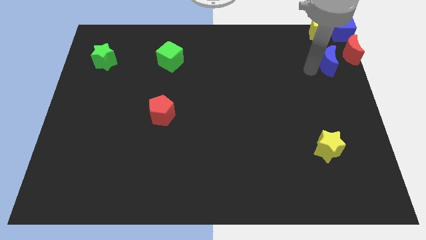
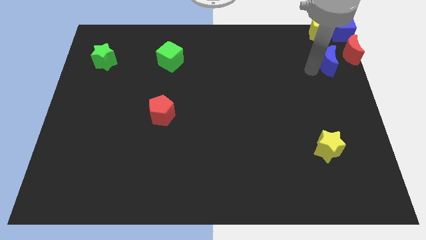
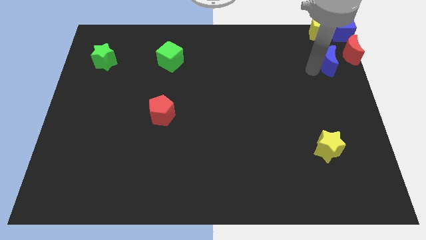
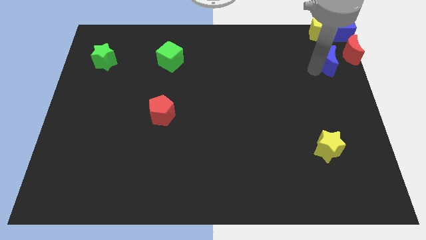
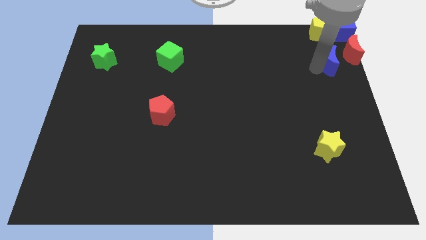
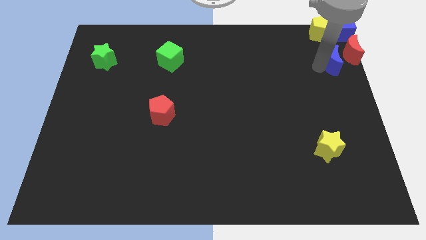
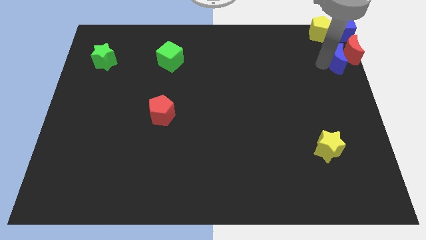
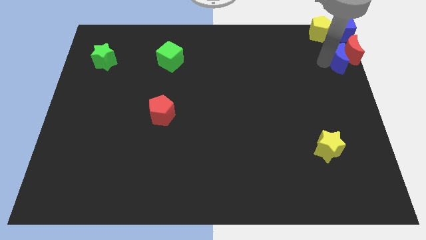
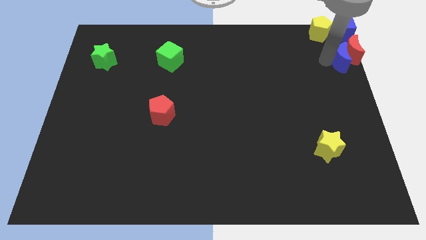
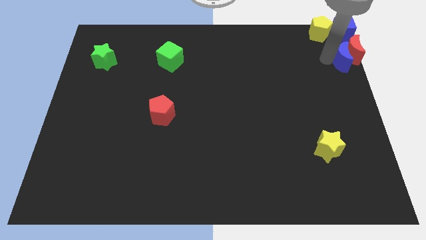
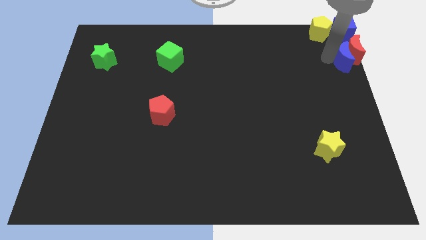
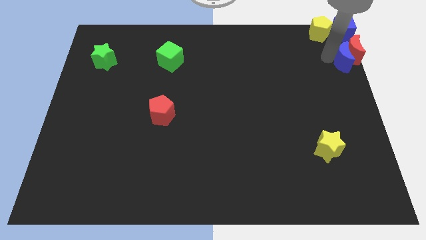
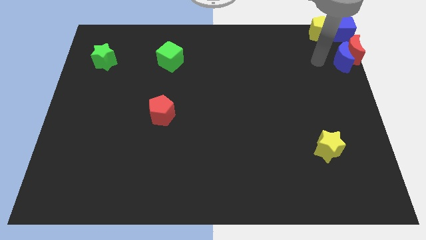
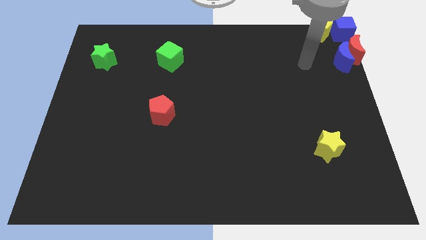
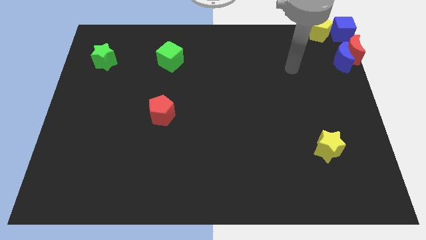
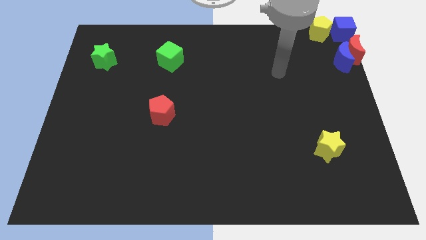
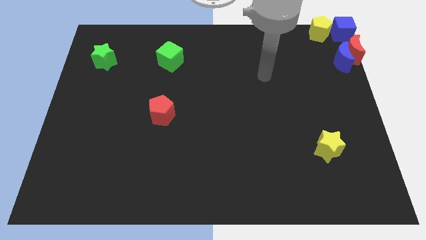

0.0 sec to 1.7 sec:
push the blue crescent into the red crescent

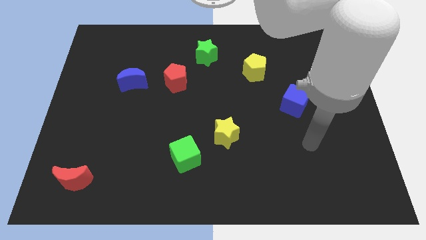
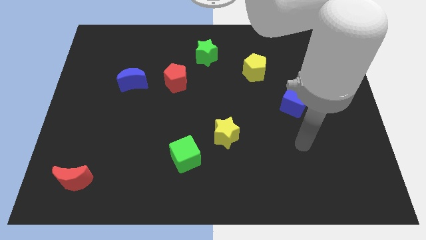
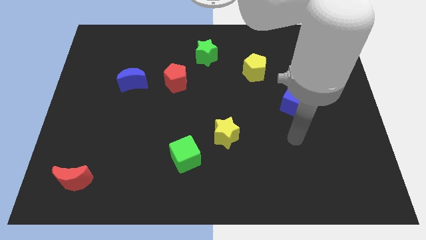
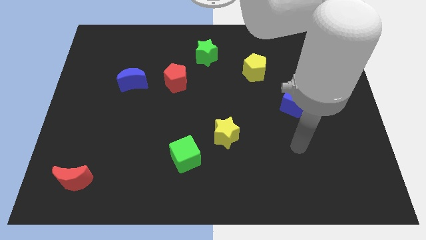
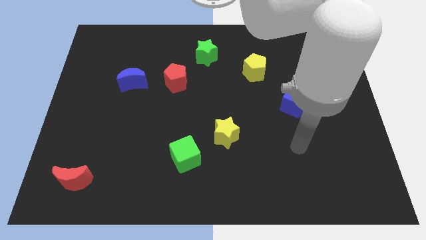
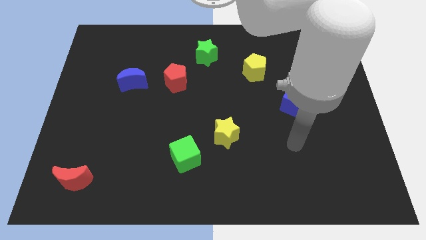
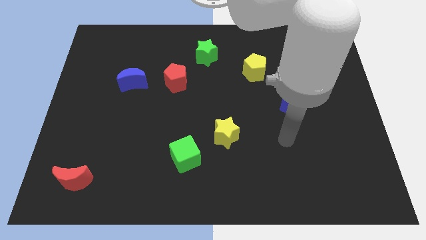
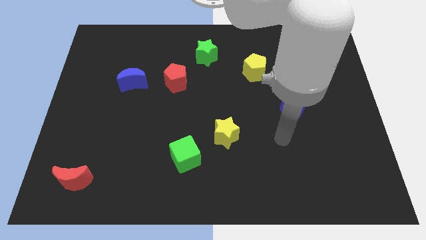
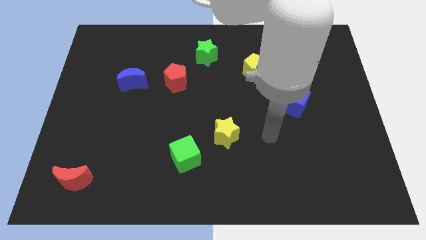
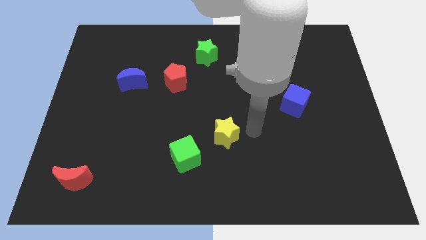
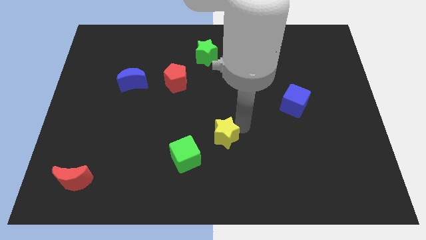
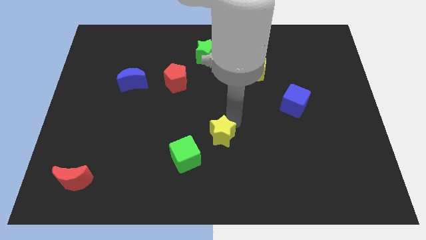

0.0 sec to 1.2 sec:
point your arm above yellow star

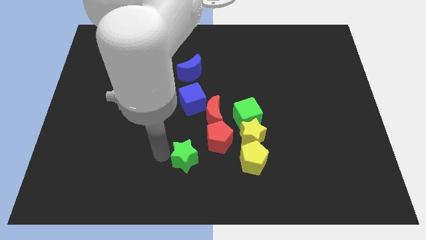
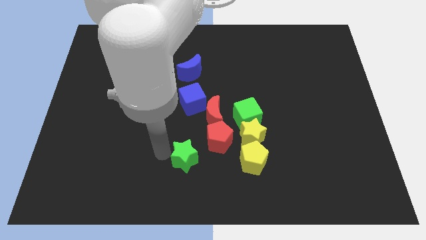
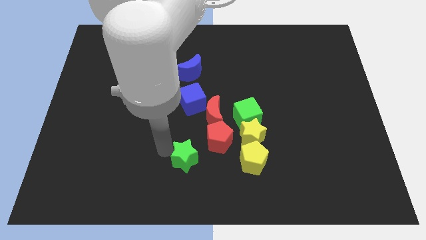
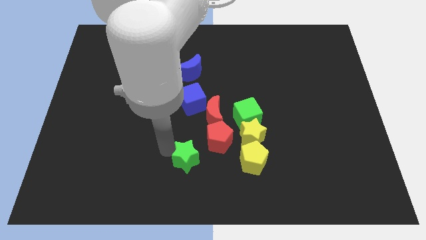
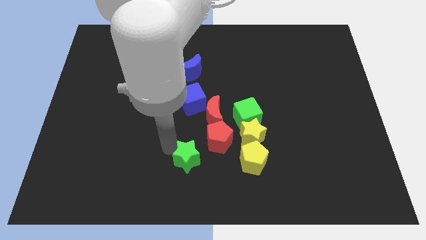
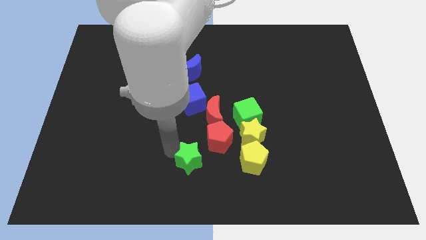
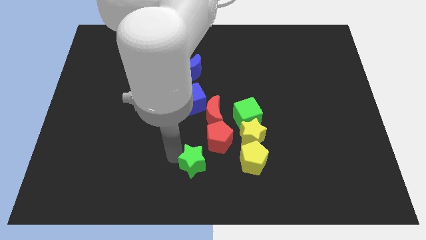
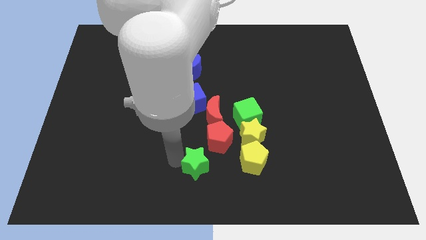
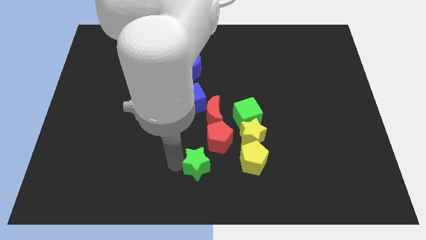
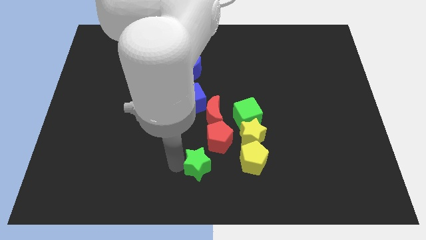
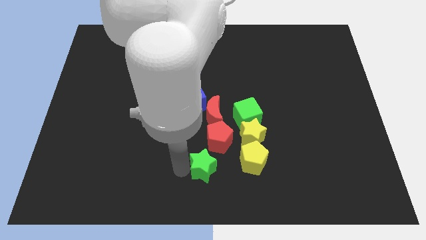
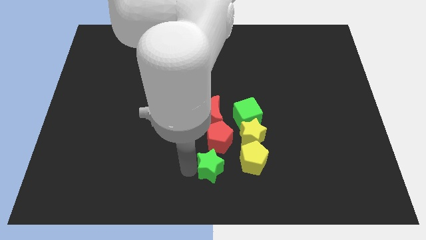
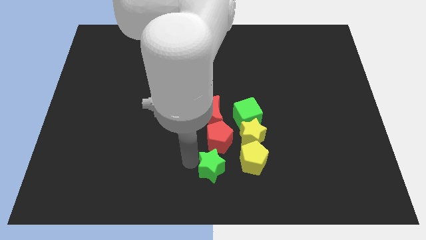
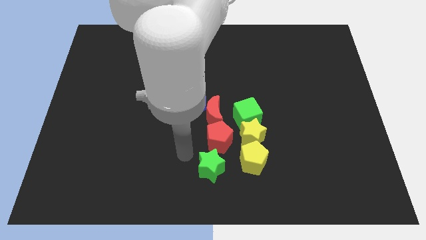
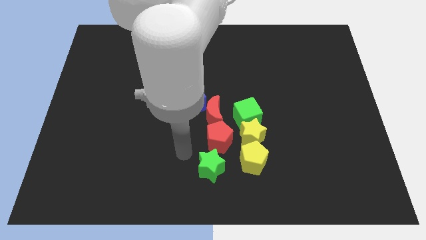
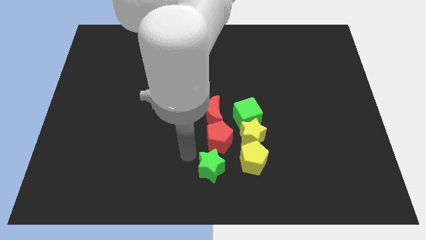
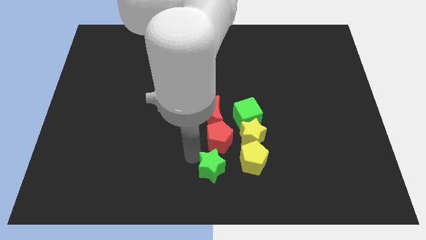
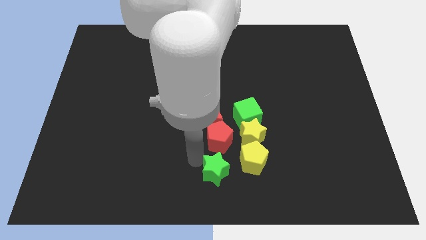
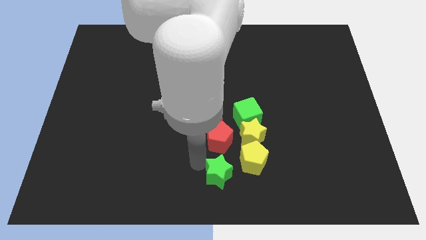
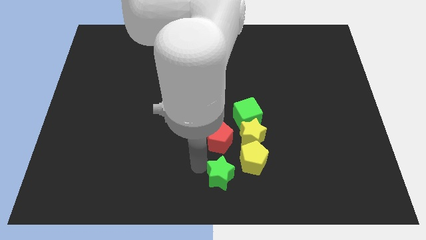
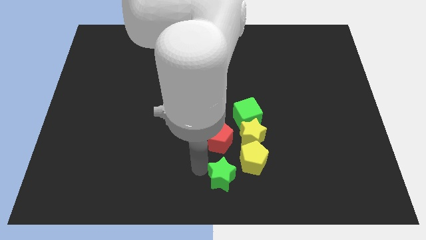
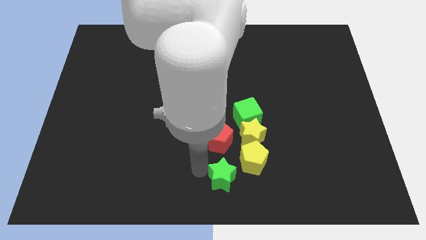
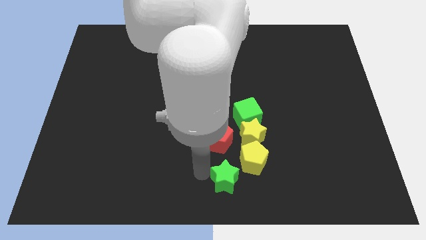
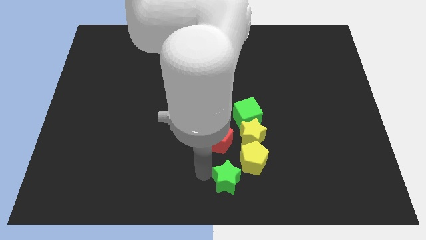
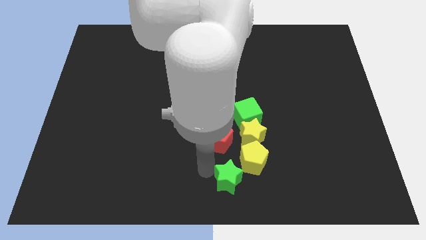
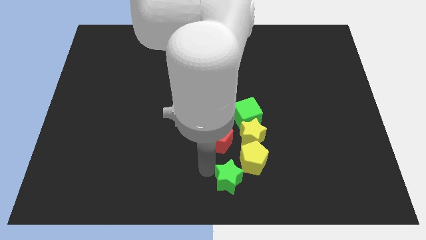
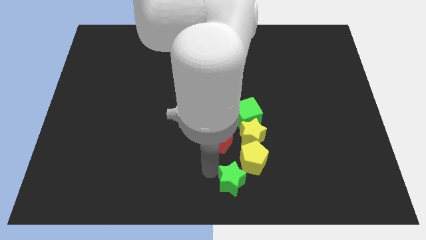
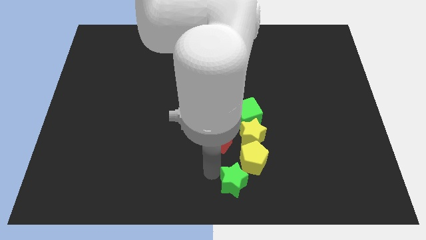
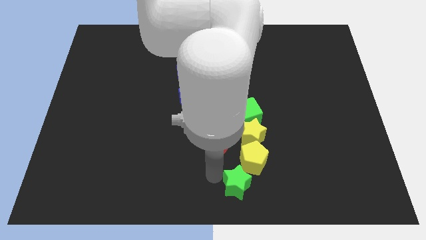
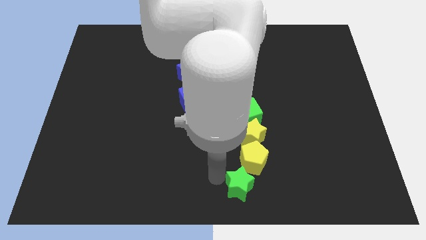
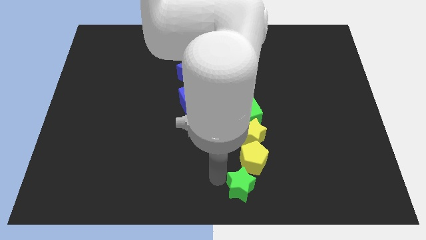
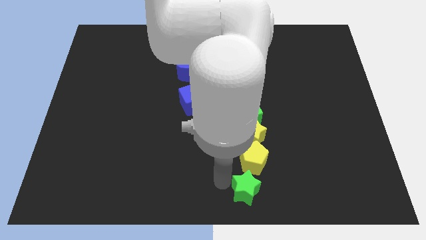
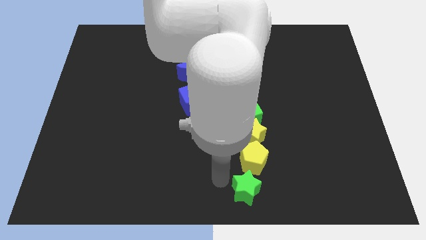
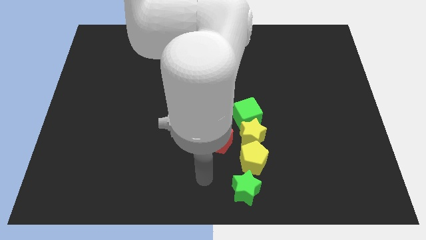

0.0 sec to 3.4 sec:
place green star below yellow pentagon

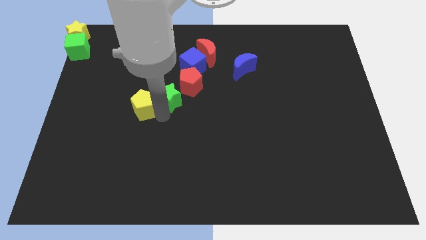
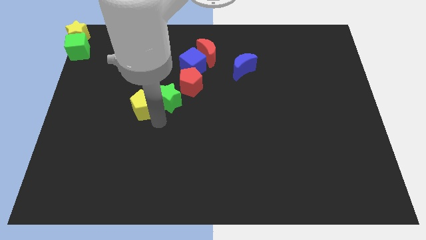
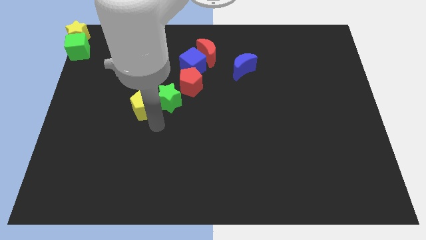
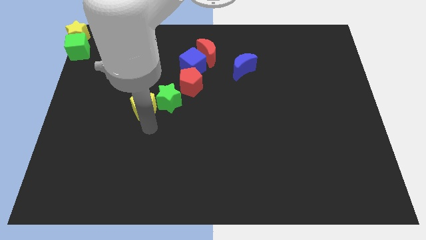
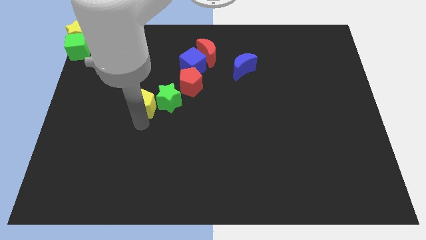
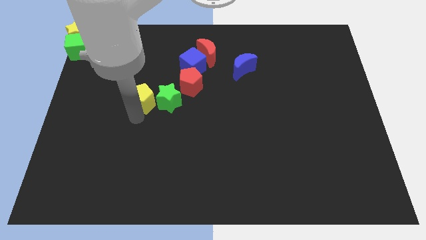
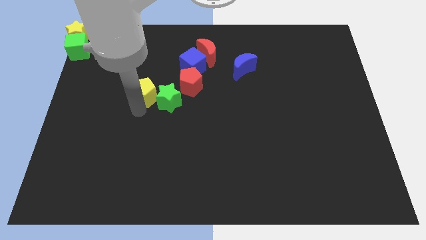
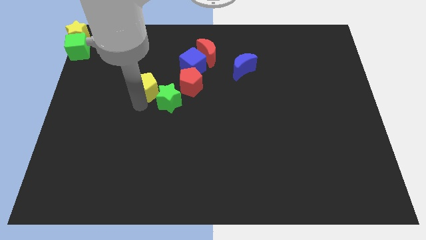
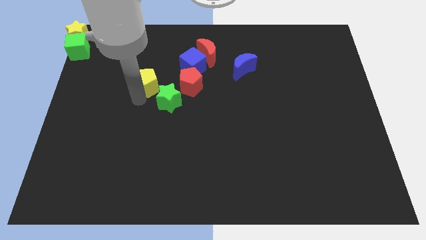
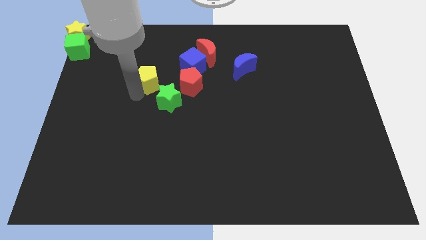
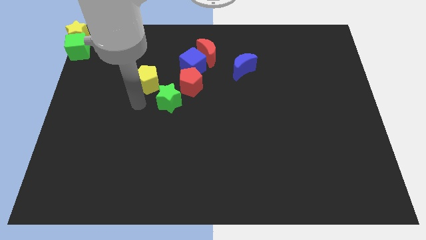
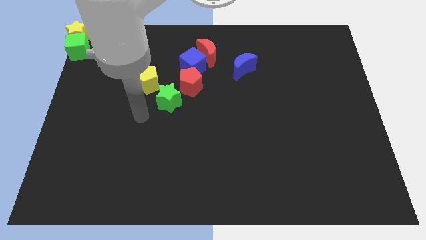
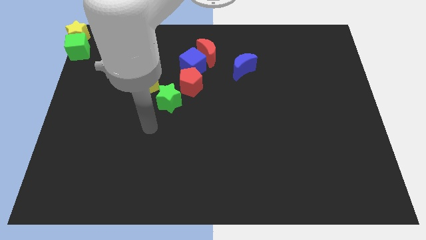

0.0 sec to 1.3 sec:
separate the yellow pentagon from the green star

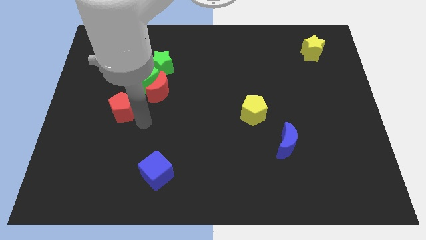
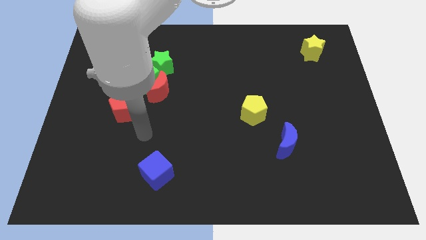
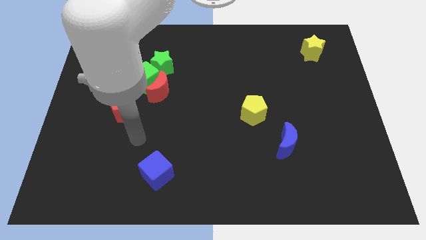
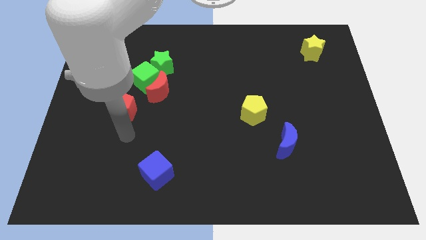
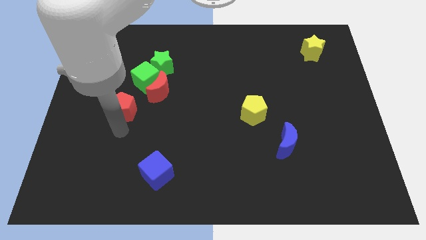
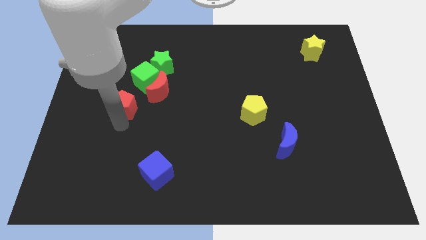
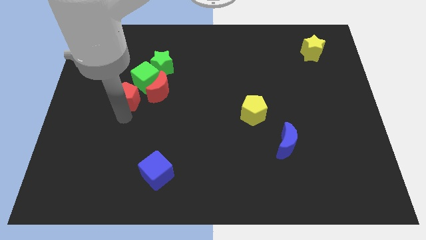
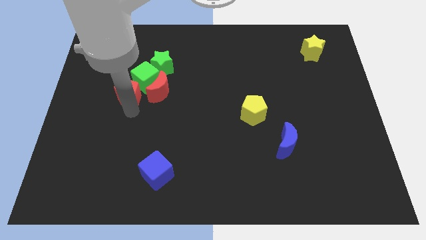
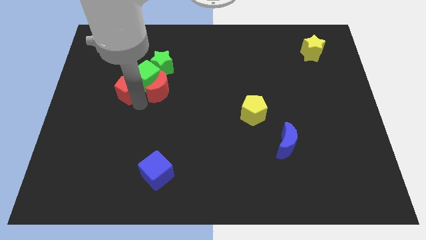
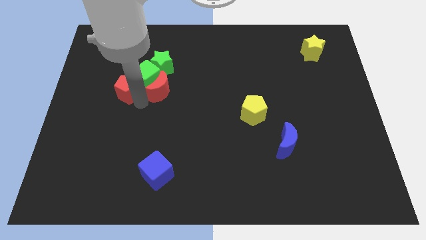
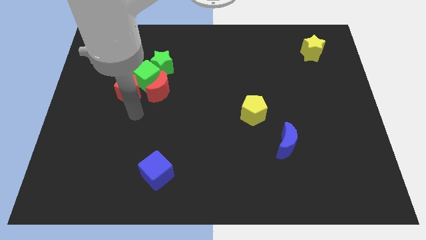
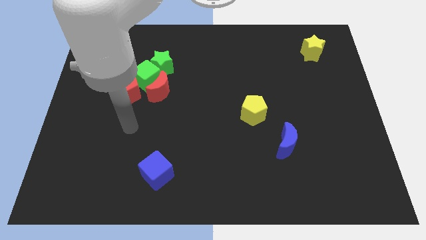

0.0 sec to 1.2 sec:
push red pentagon into the green cube

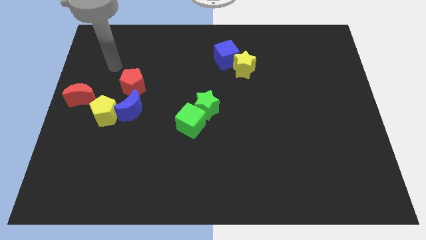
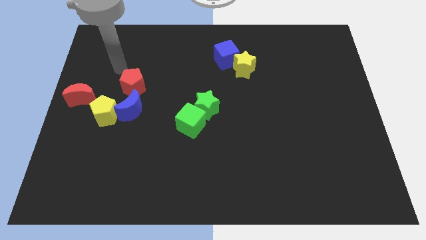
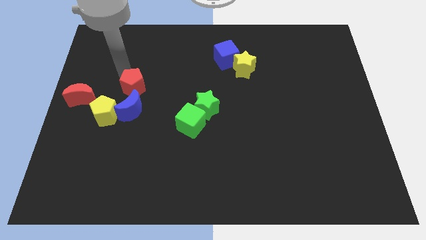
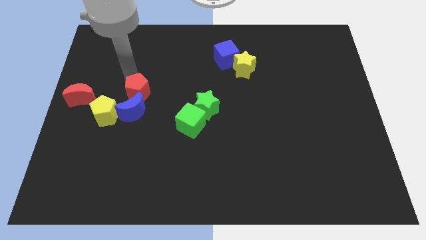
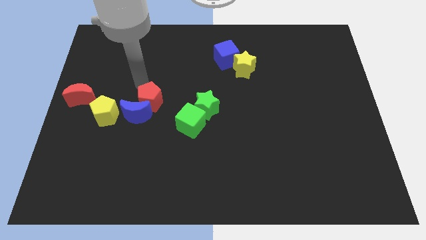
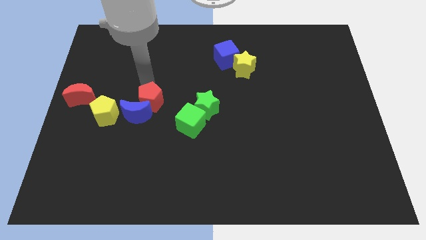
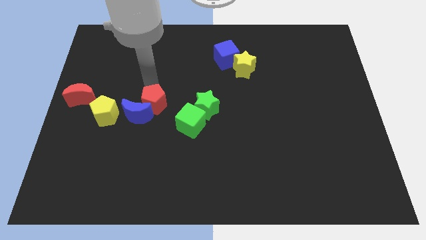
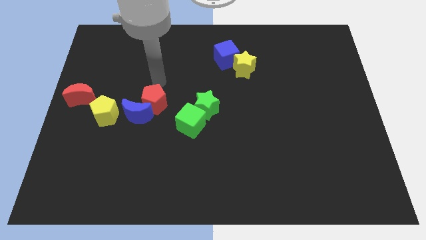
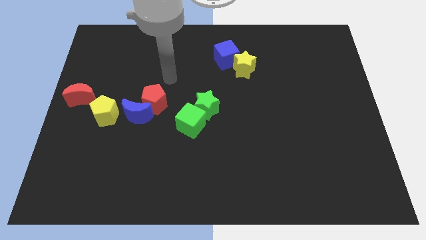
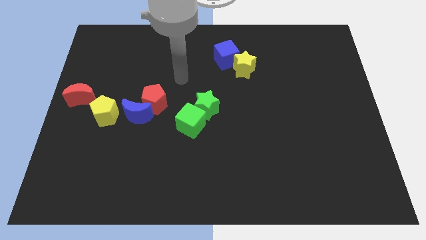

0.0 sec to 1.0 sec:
push the red pentagon into the blue moon
